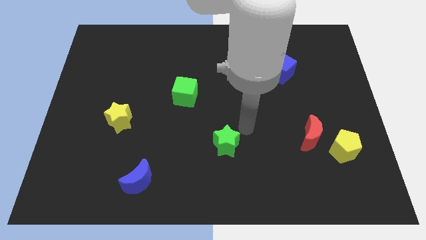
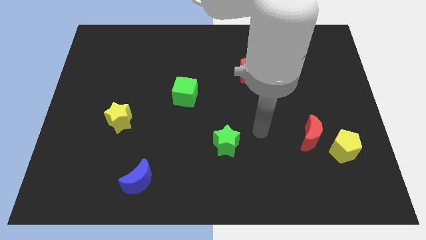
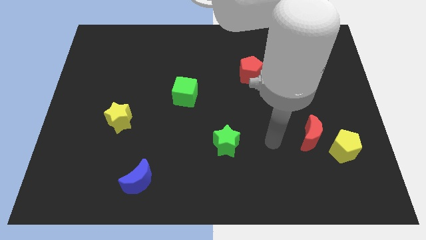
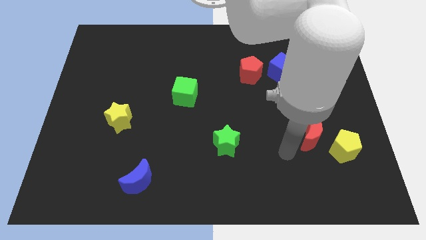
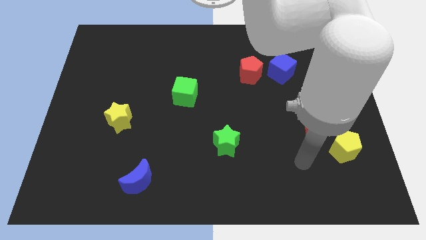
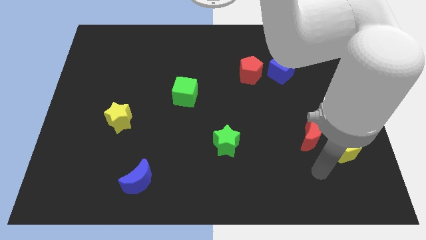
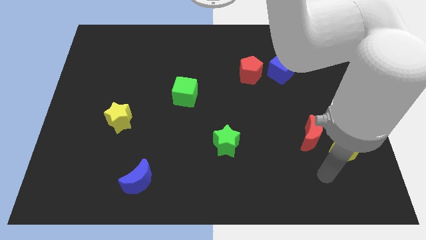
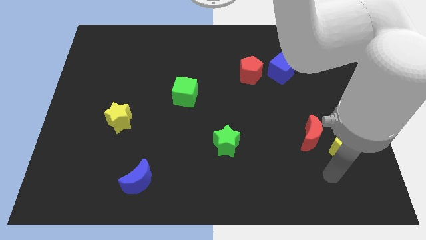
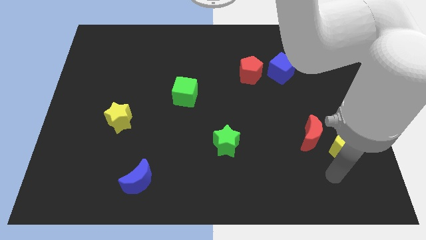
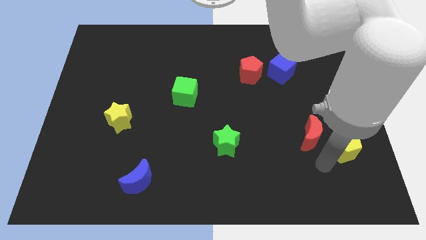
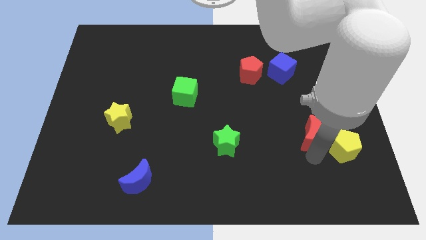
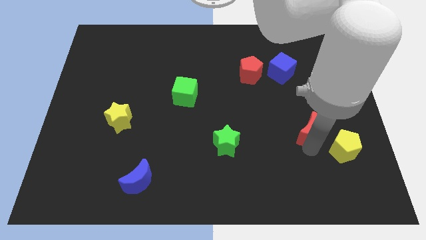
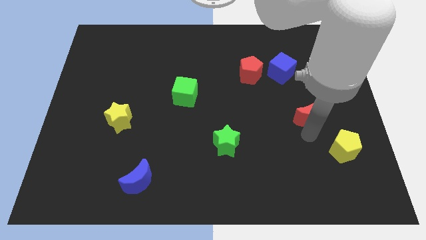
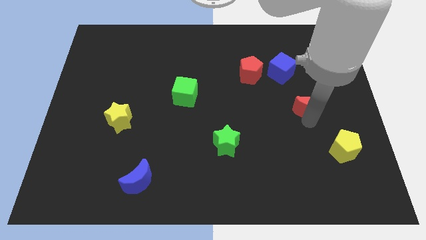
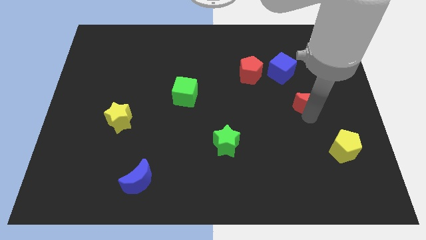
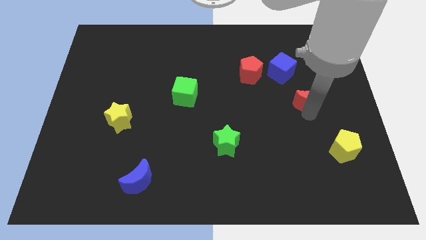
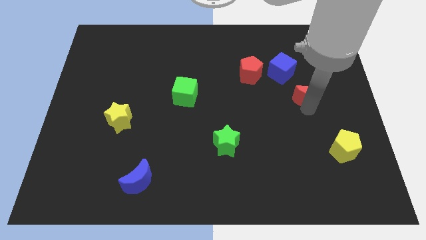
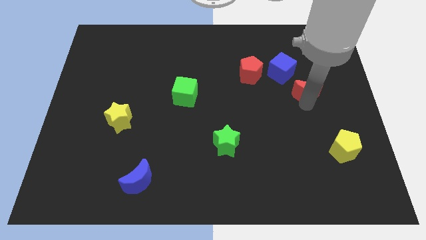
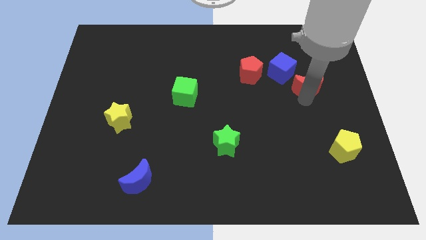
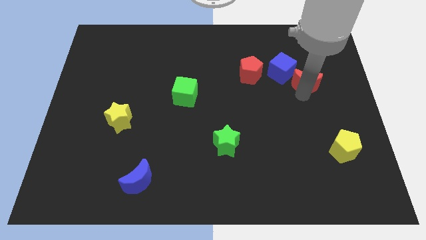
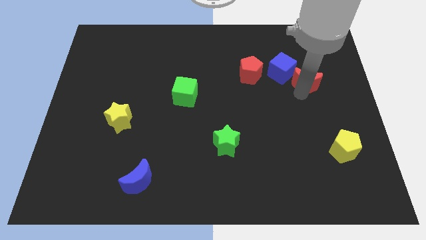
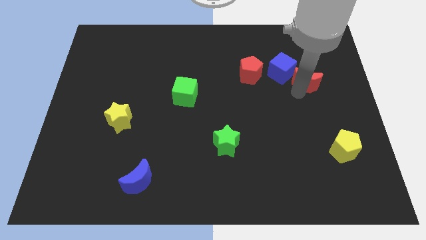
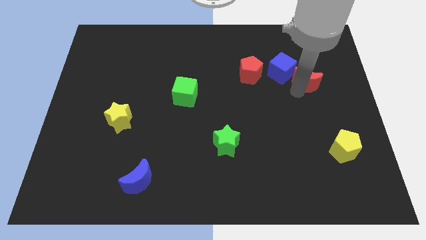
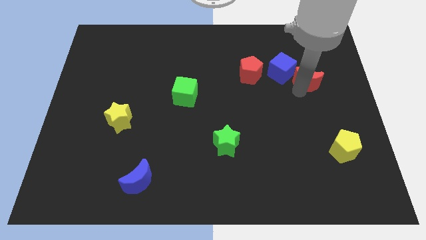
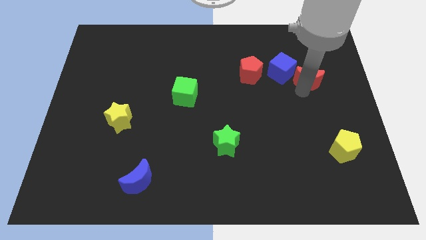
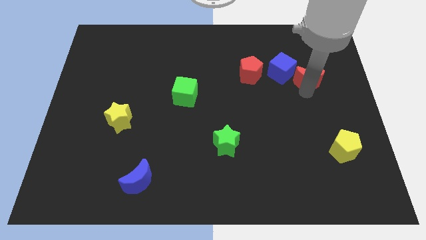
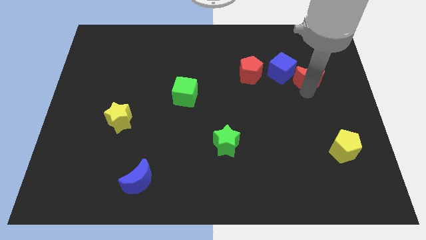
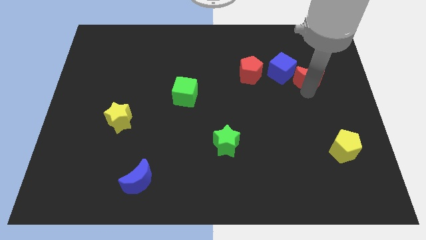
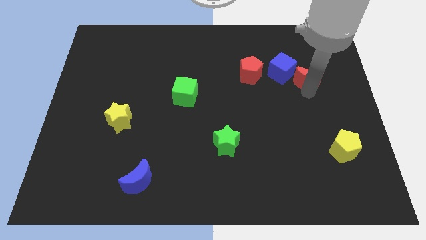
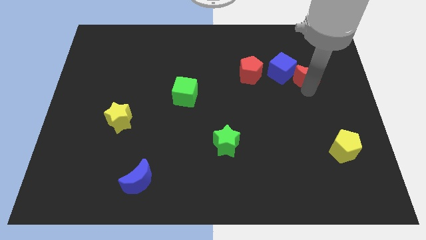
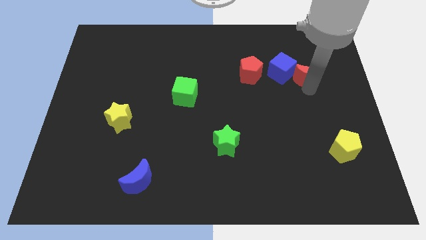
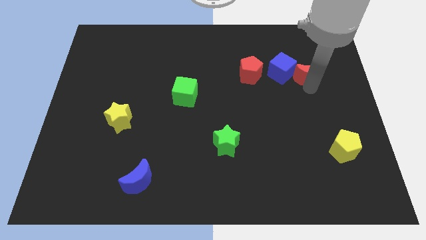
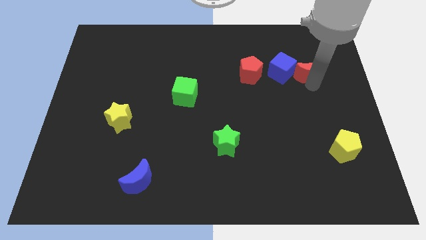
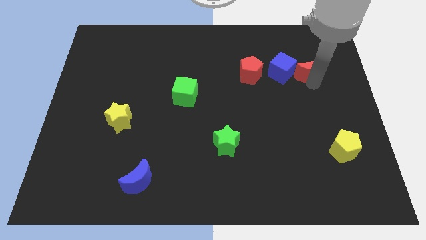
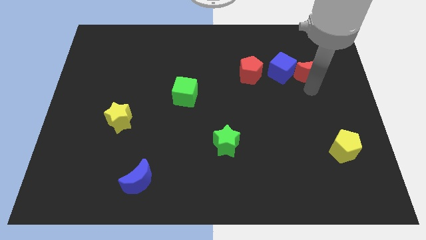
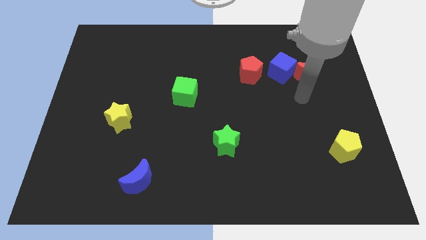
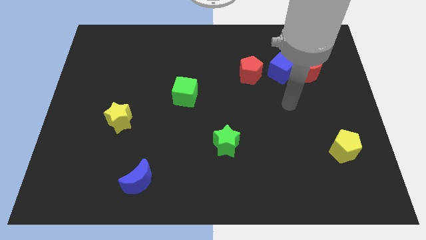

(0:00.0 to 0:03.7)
push the red moon to the right of the blue cube

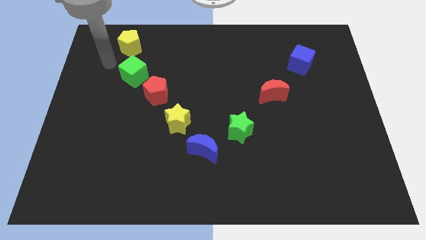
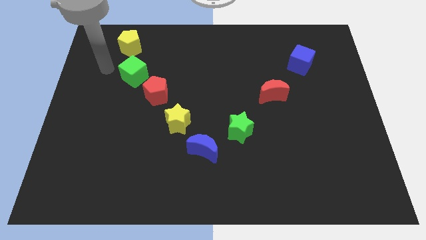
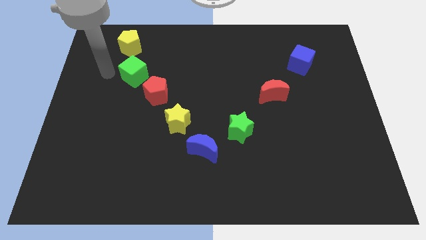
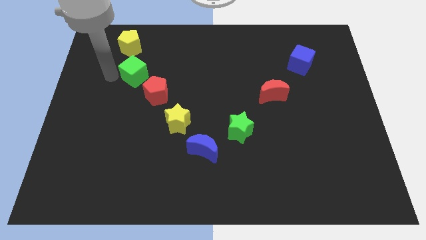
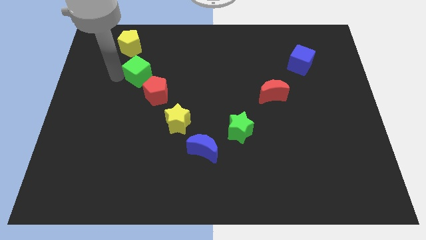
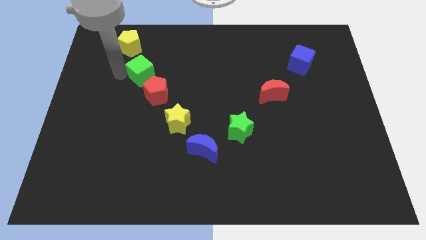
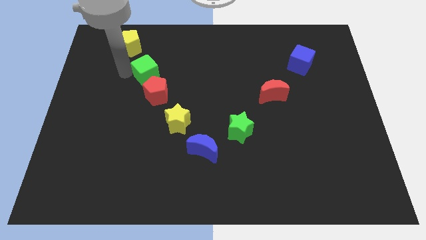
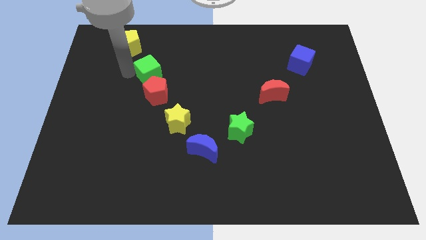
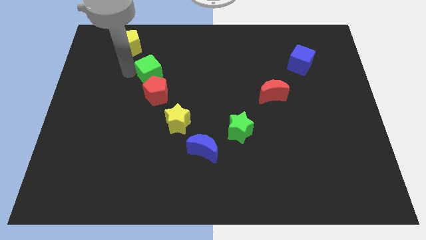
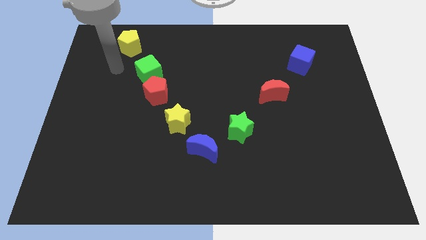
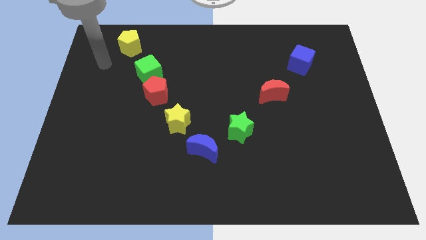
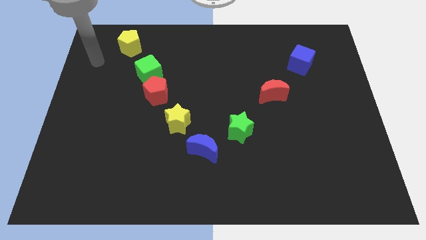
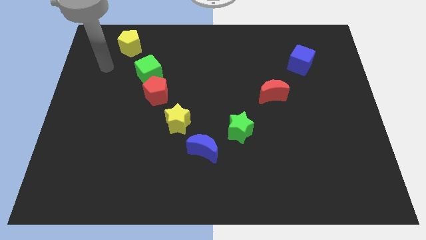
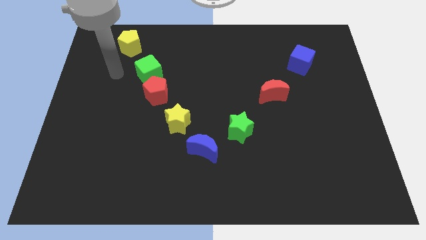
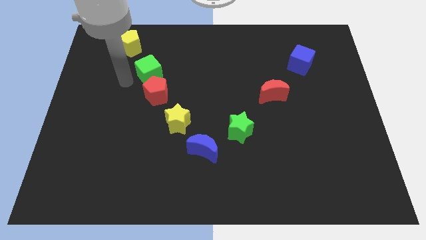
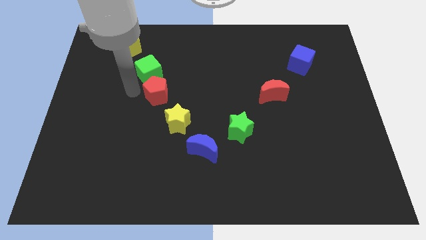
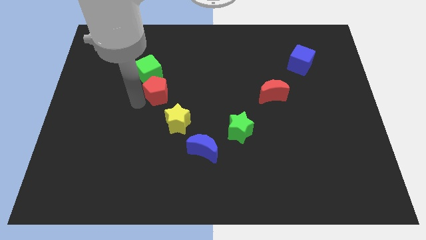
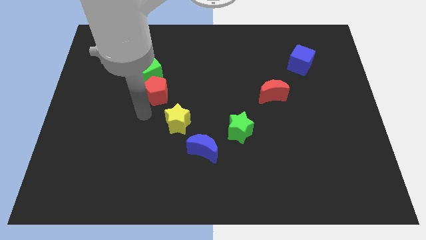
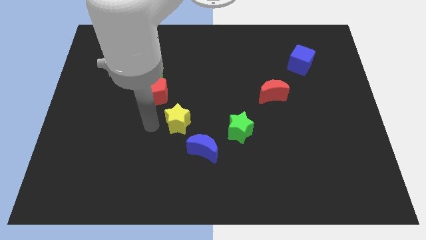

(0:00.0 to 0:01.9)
place green cube above red pentagon

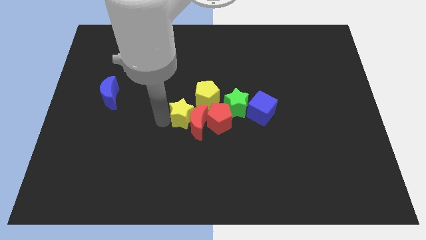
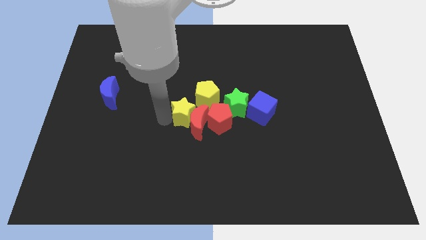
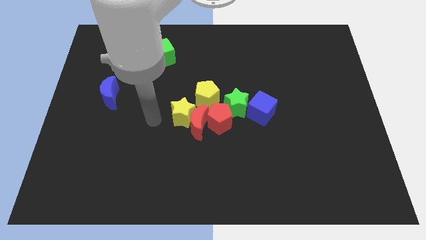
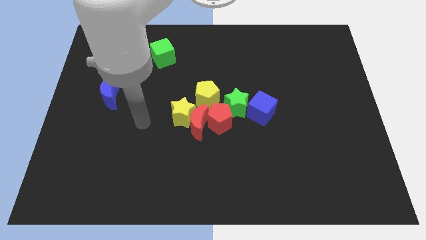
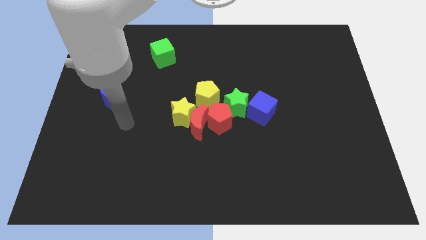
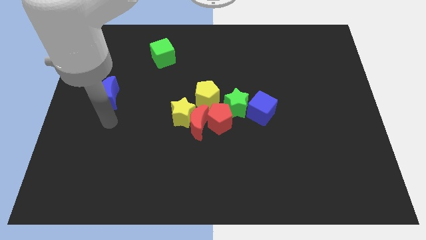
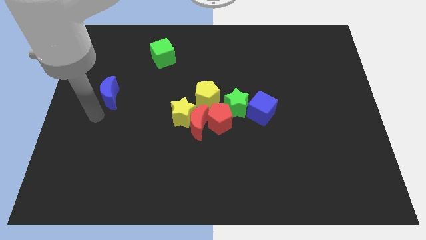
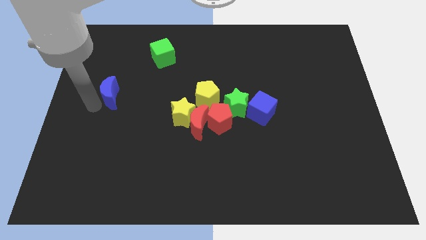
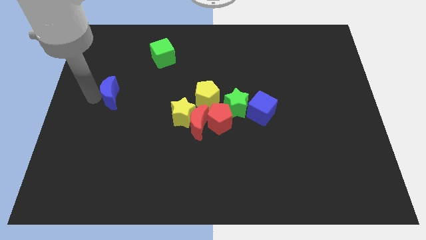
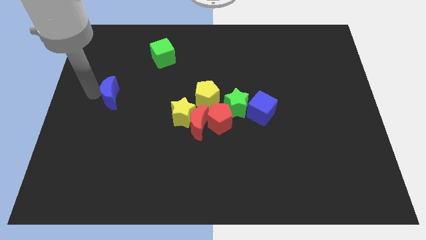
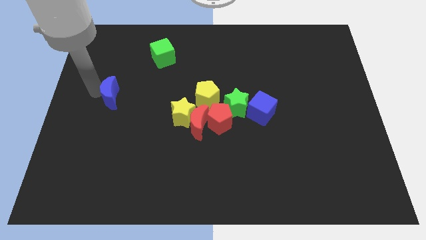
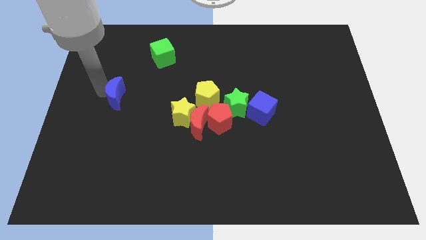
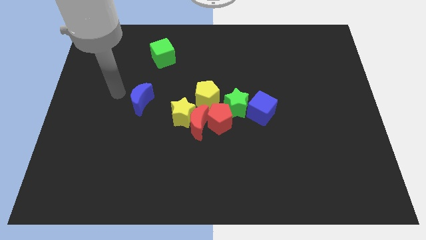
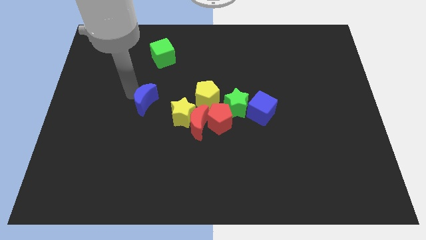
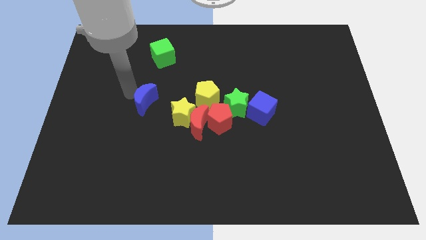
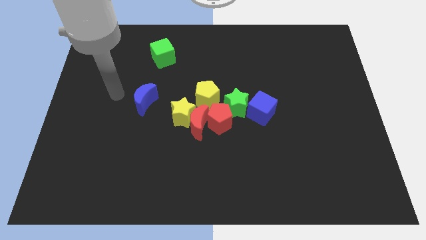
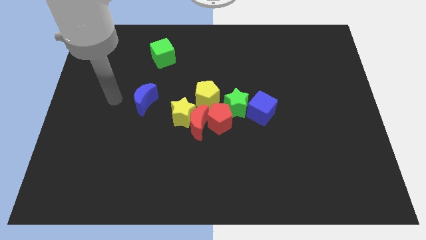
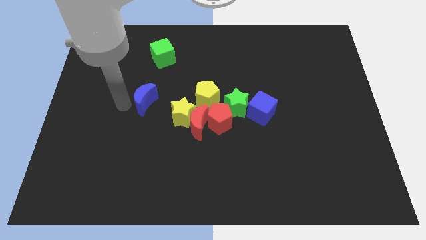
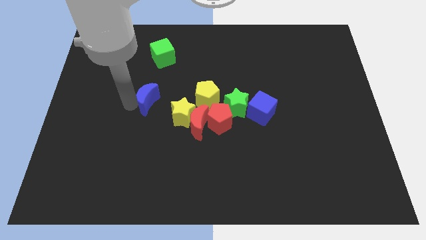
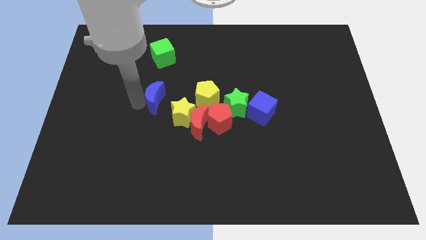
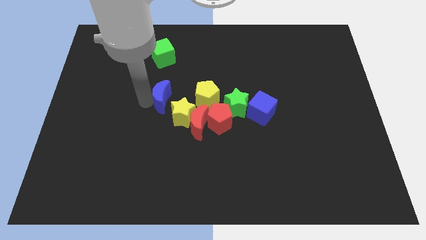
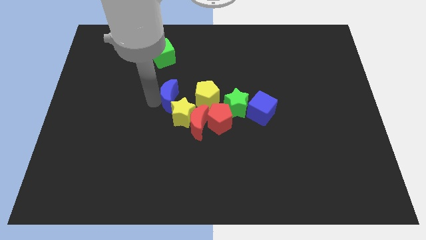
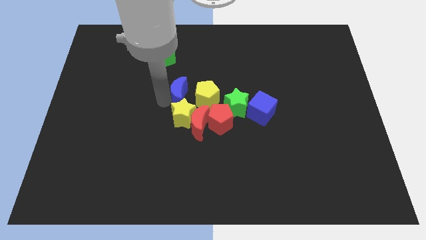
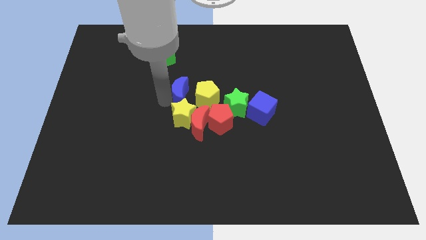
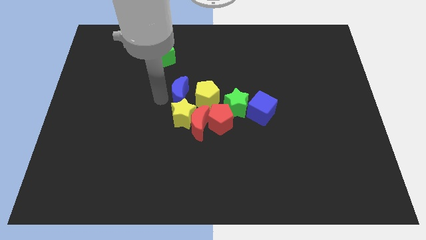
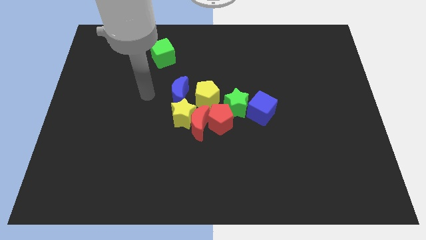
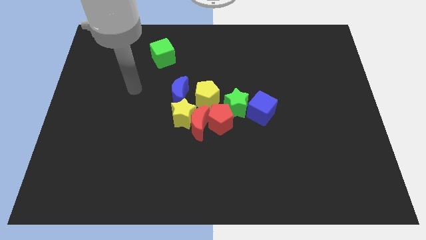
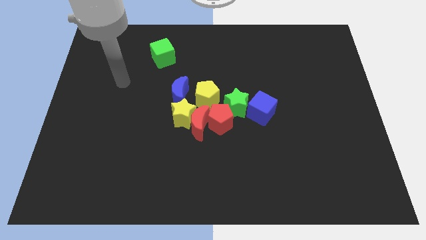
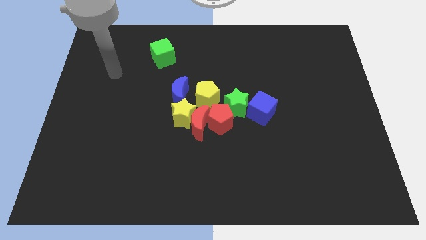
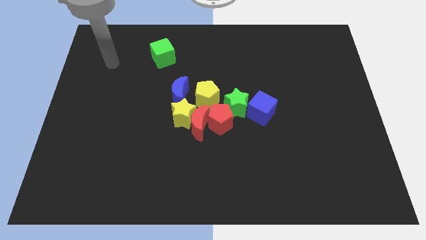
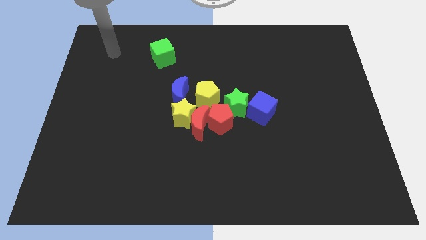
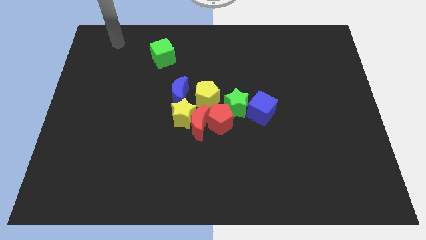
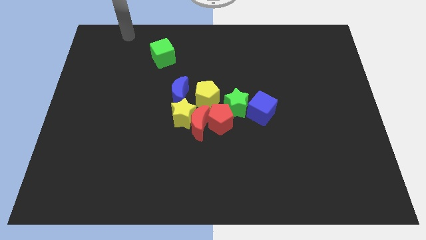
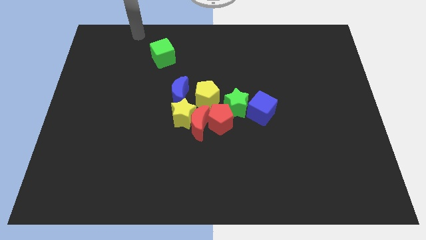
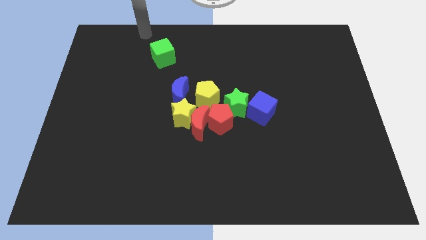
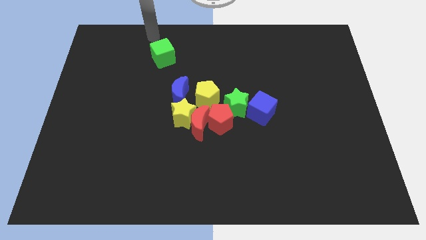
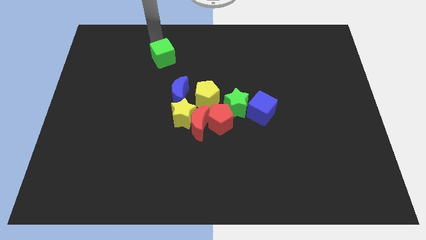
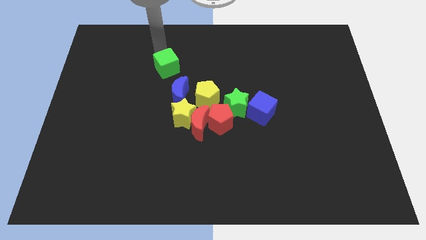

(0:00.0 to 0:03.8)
push the blue moon to the top of the yellow star
